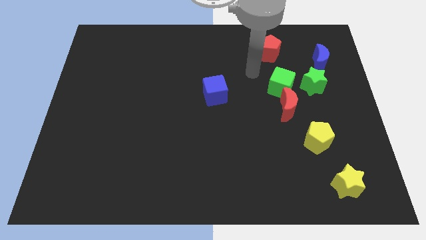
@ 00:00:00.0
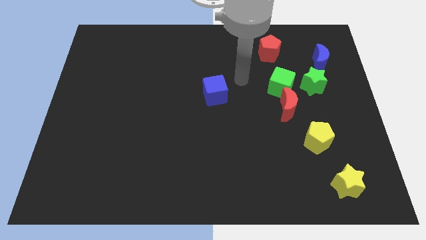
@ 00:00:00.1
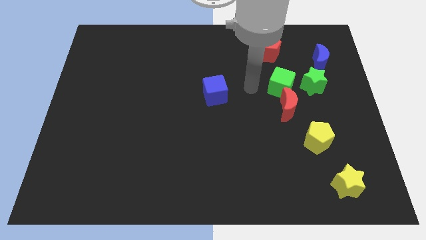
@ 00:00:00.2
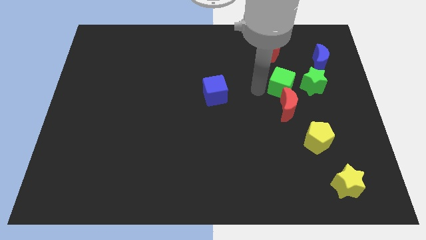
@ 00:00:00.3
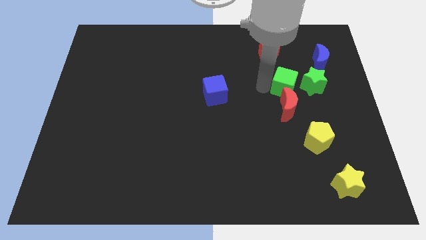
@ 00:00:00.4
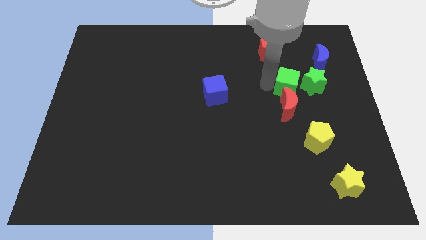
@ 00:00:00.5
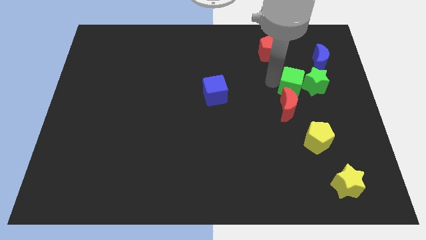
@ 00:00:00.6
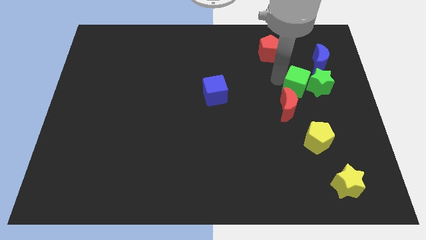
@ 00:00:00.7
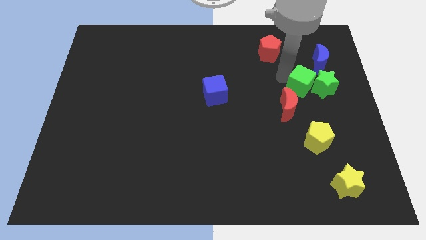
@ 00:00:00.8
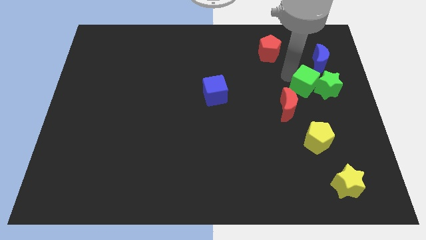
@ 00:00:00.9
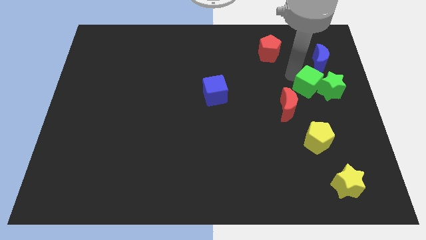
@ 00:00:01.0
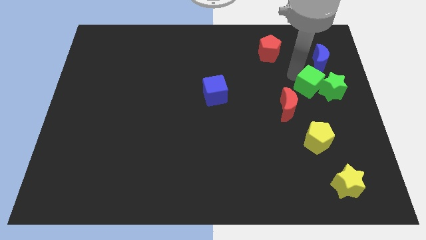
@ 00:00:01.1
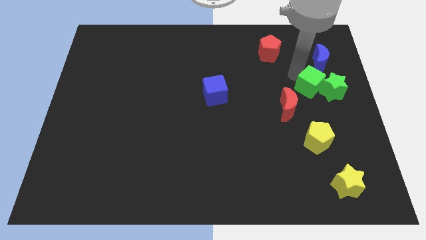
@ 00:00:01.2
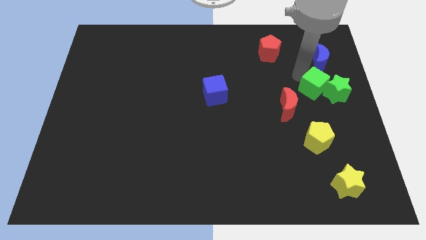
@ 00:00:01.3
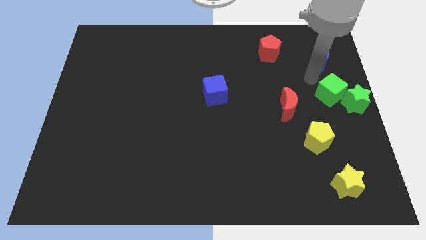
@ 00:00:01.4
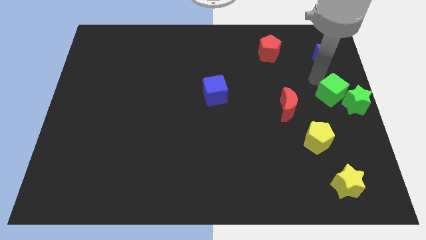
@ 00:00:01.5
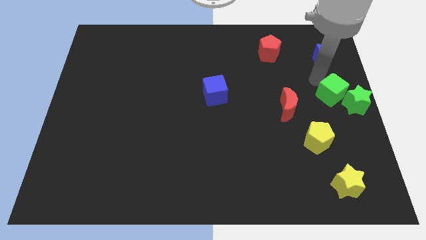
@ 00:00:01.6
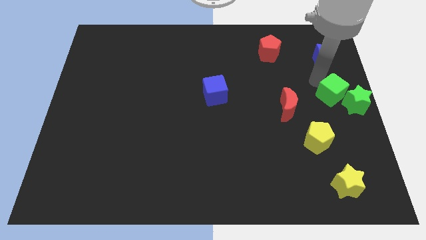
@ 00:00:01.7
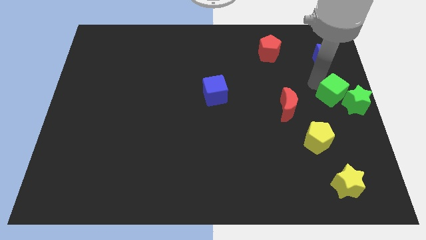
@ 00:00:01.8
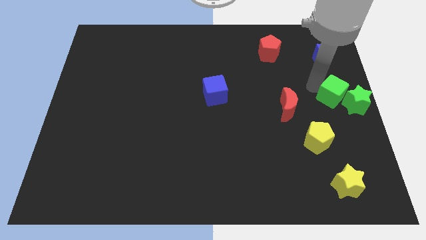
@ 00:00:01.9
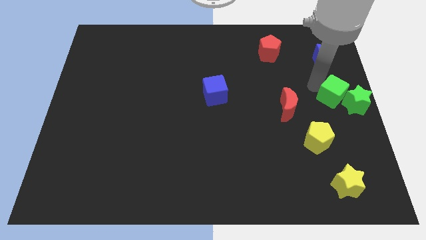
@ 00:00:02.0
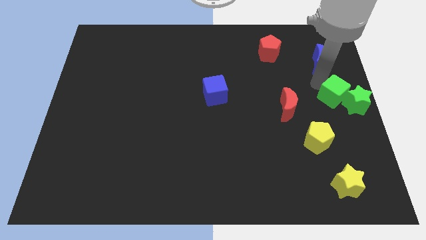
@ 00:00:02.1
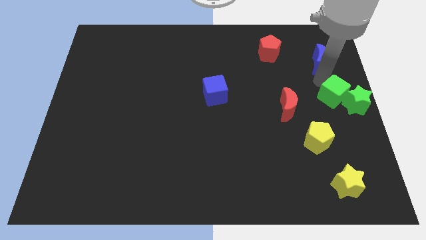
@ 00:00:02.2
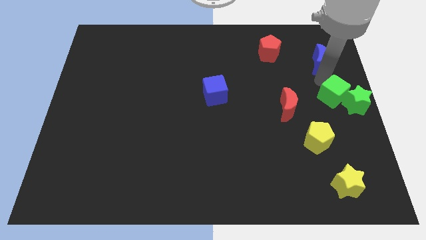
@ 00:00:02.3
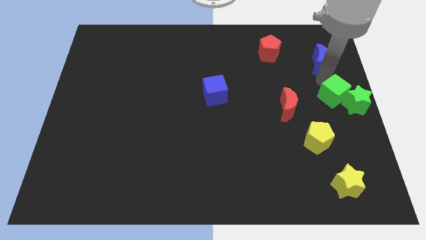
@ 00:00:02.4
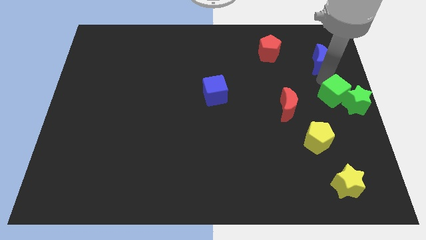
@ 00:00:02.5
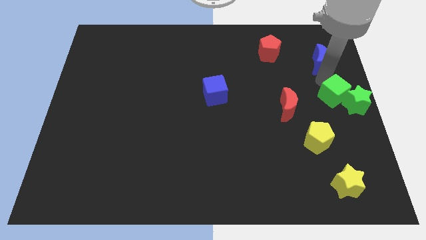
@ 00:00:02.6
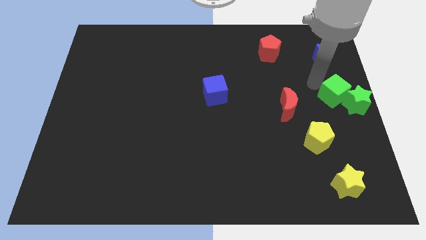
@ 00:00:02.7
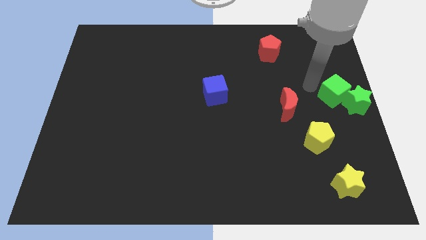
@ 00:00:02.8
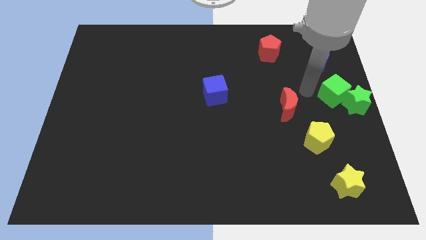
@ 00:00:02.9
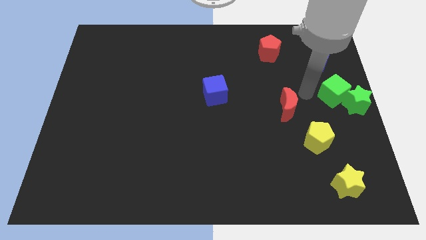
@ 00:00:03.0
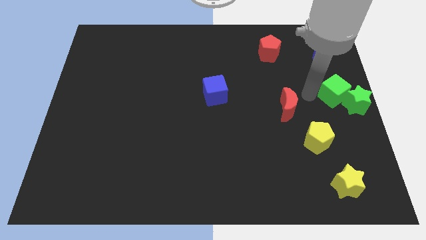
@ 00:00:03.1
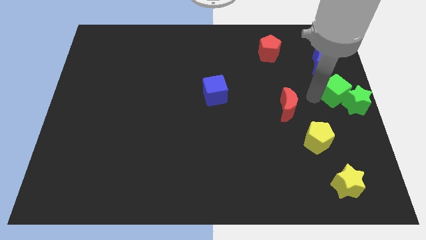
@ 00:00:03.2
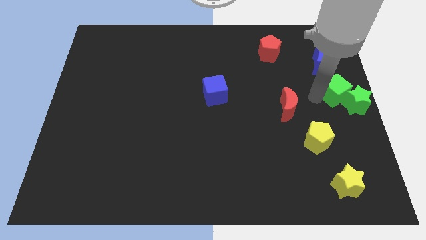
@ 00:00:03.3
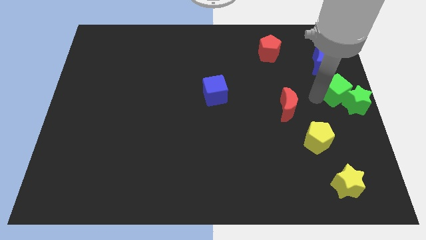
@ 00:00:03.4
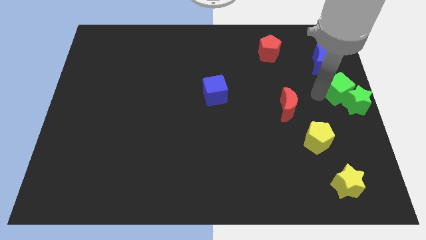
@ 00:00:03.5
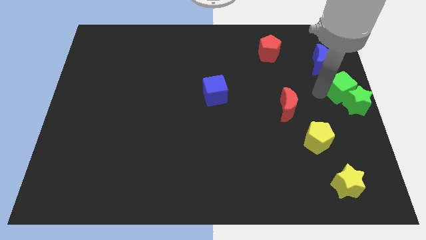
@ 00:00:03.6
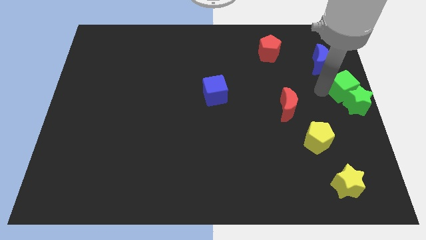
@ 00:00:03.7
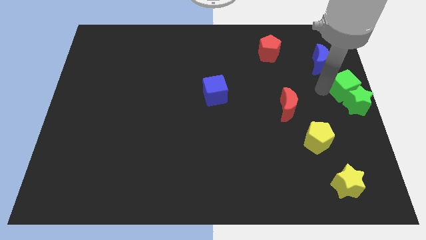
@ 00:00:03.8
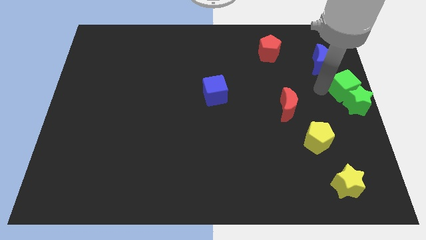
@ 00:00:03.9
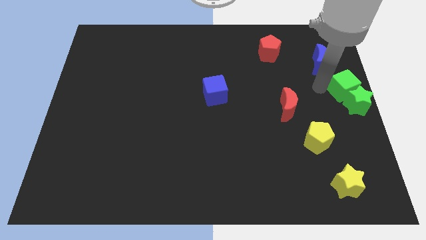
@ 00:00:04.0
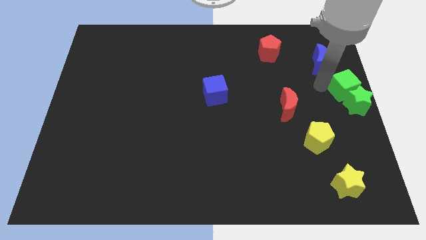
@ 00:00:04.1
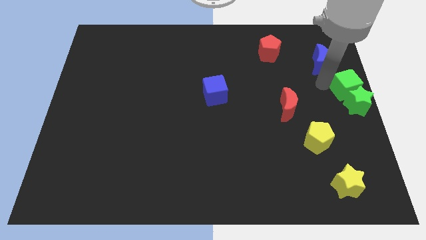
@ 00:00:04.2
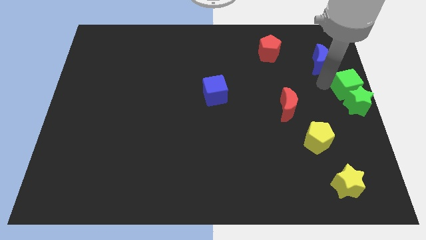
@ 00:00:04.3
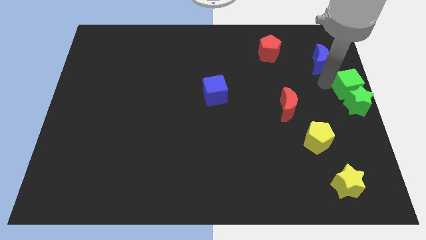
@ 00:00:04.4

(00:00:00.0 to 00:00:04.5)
push the green cubegreen star towards the center right side of the board

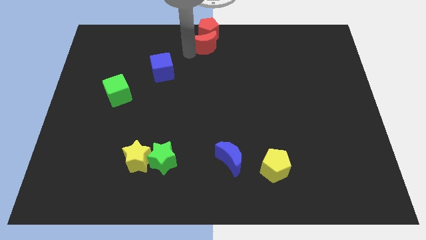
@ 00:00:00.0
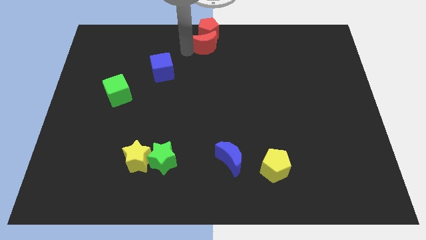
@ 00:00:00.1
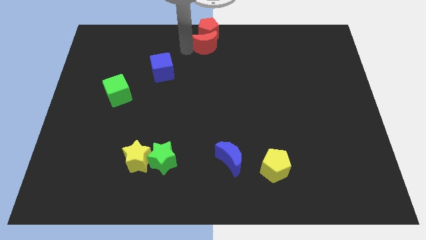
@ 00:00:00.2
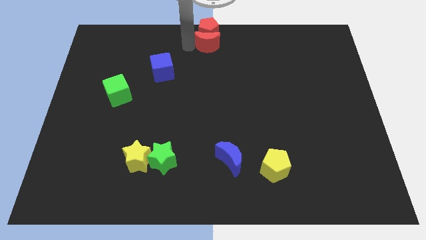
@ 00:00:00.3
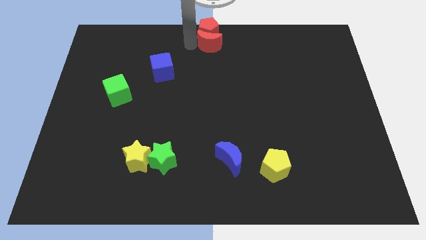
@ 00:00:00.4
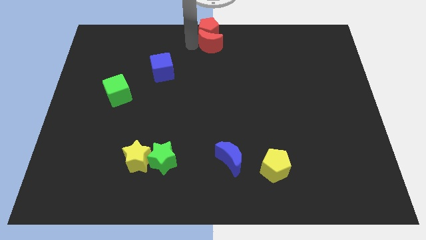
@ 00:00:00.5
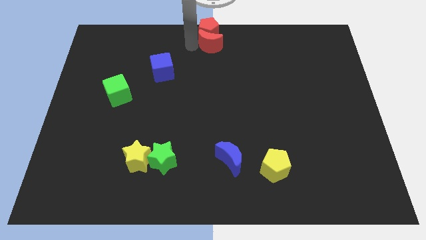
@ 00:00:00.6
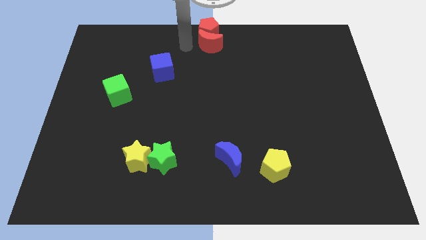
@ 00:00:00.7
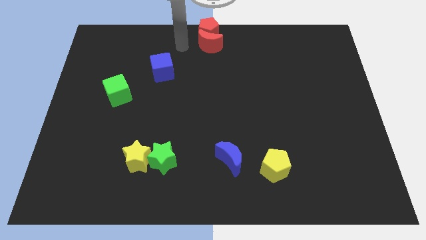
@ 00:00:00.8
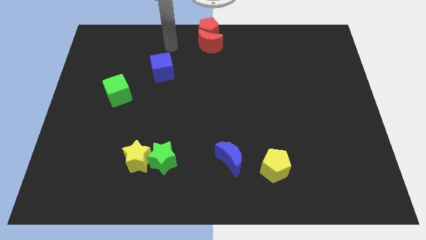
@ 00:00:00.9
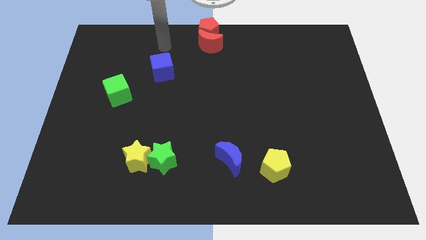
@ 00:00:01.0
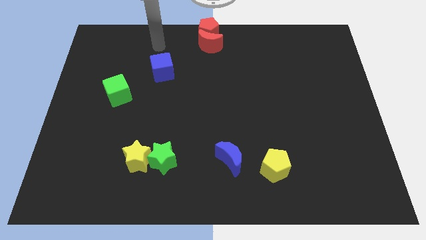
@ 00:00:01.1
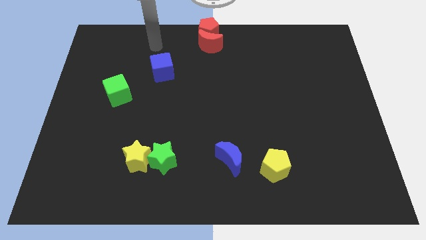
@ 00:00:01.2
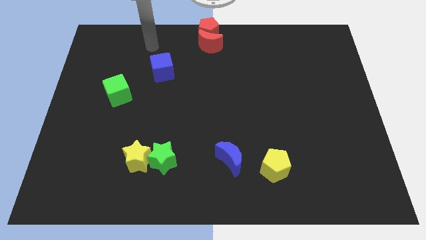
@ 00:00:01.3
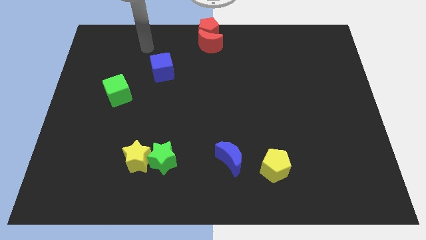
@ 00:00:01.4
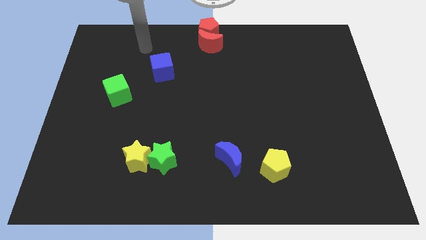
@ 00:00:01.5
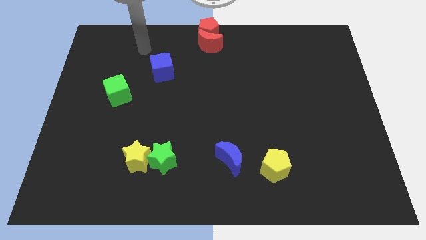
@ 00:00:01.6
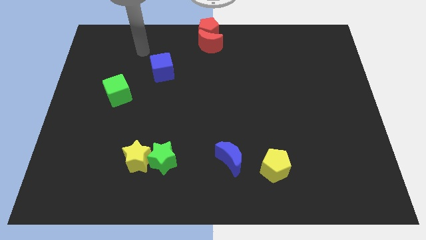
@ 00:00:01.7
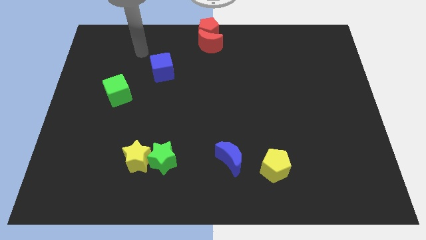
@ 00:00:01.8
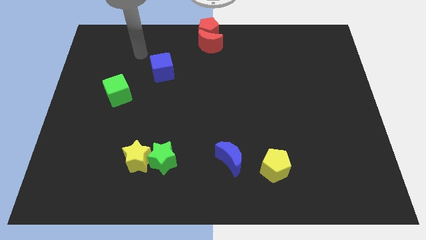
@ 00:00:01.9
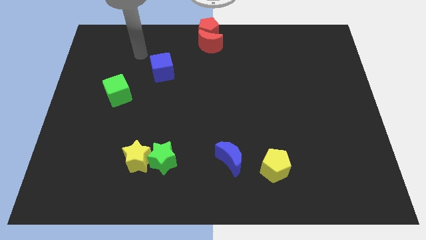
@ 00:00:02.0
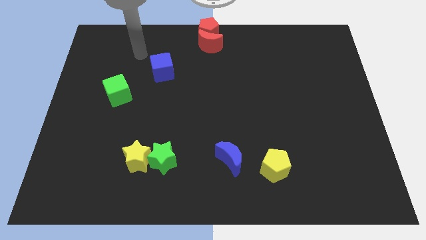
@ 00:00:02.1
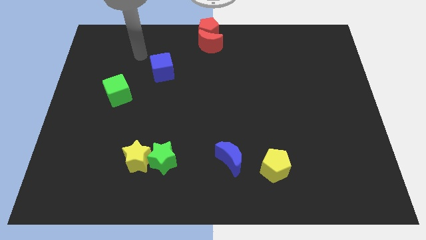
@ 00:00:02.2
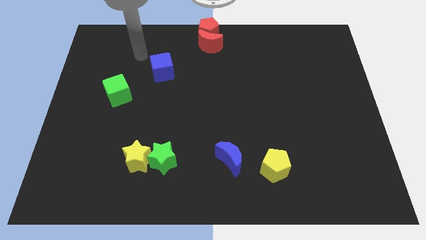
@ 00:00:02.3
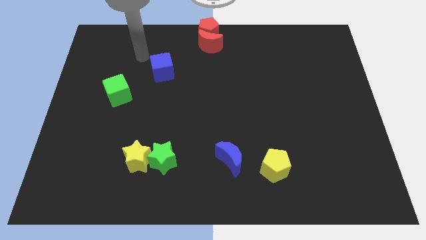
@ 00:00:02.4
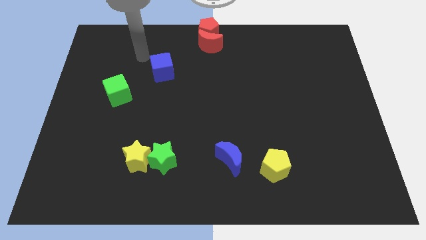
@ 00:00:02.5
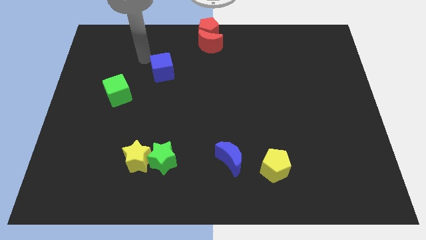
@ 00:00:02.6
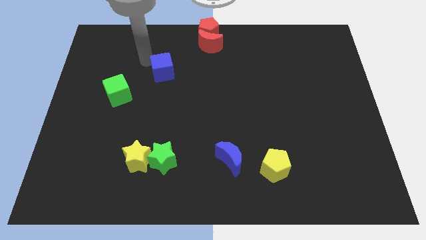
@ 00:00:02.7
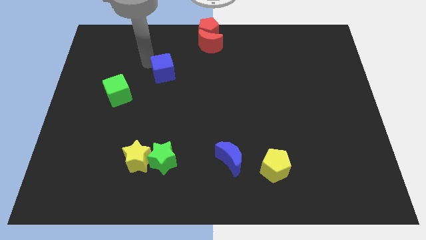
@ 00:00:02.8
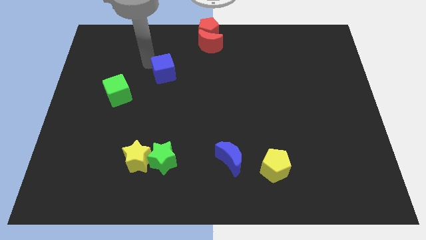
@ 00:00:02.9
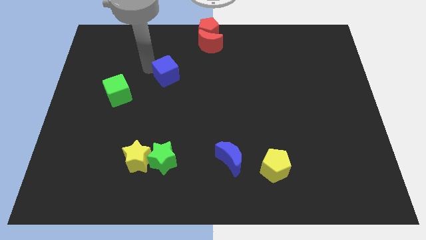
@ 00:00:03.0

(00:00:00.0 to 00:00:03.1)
place your arm on top of a blue cube

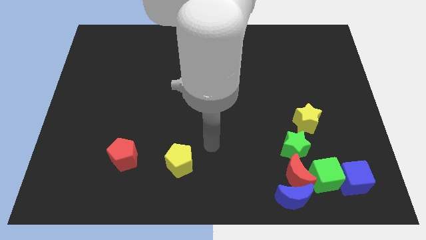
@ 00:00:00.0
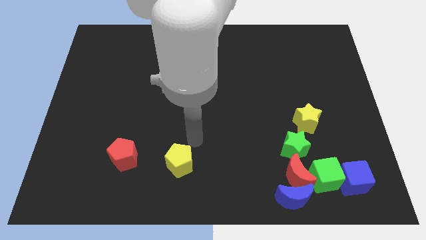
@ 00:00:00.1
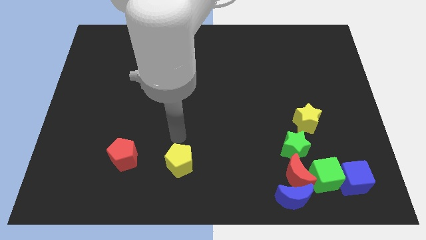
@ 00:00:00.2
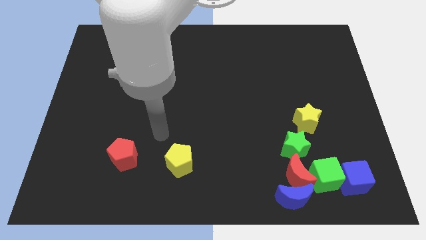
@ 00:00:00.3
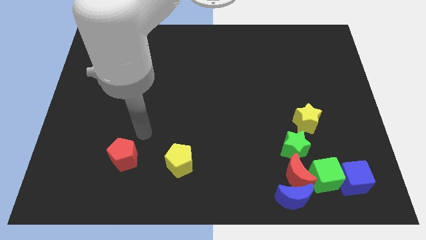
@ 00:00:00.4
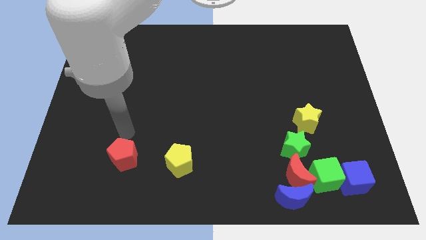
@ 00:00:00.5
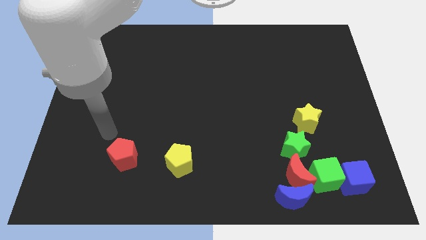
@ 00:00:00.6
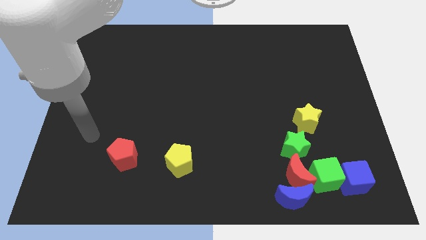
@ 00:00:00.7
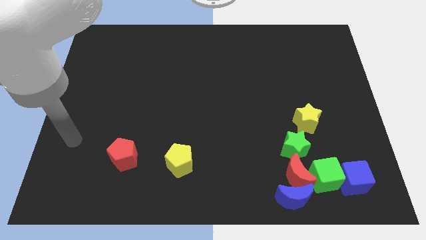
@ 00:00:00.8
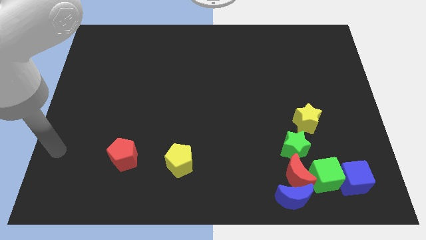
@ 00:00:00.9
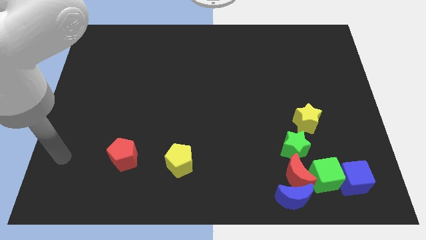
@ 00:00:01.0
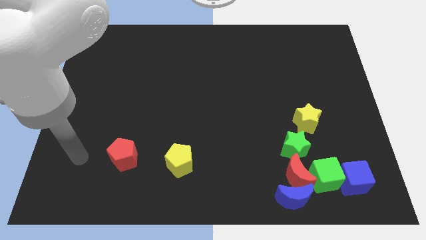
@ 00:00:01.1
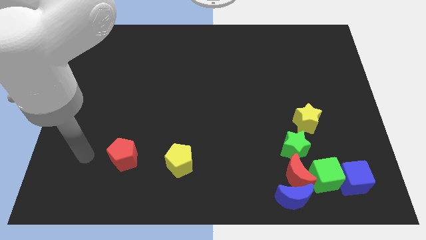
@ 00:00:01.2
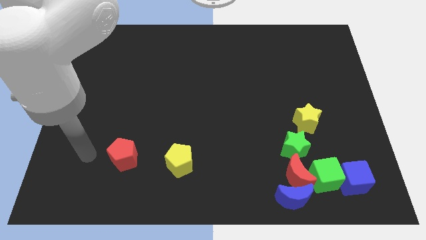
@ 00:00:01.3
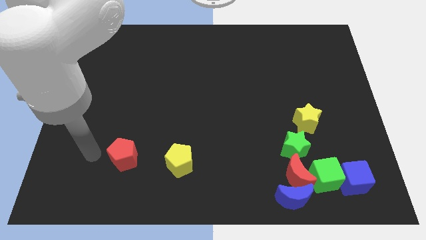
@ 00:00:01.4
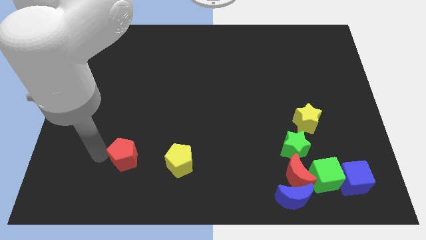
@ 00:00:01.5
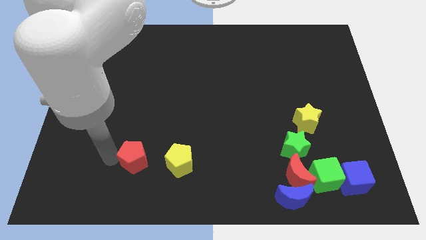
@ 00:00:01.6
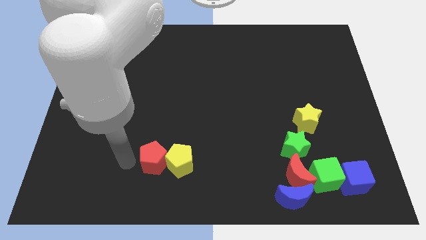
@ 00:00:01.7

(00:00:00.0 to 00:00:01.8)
move the red pentagon into the yellow pentagon
